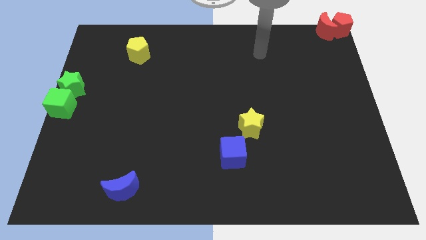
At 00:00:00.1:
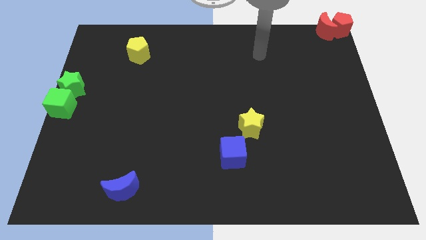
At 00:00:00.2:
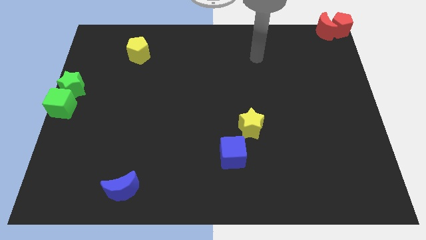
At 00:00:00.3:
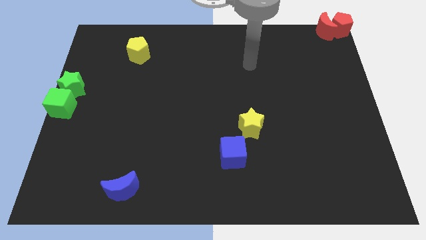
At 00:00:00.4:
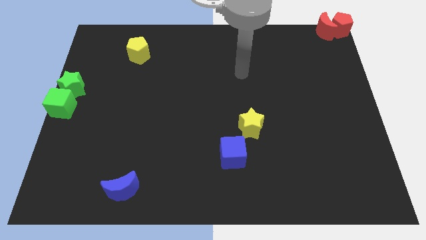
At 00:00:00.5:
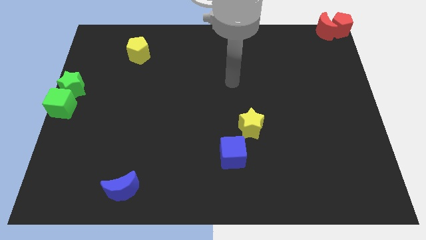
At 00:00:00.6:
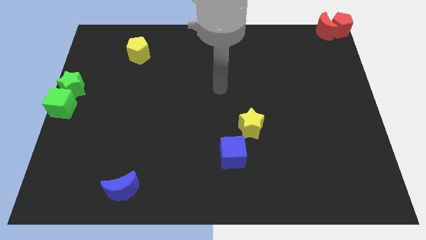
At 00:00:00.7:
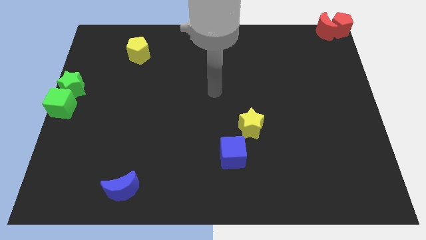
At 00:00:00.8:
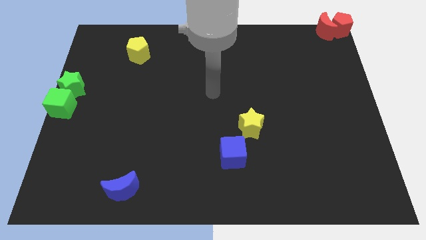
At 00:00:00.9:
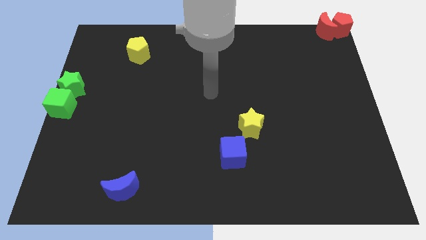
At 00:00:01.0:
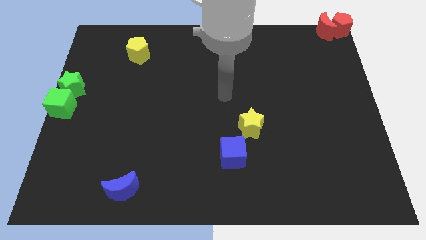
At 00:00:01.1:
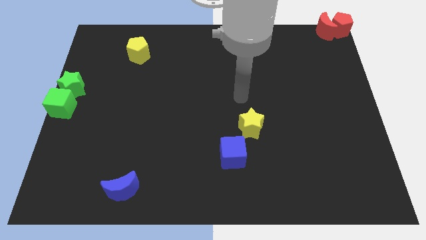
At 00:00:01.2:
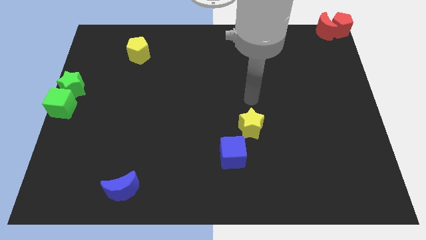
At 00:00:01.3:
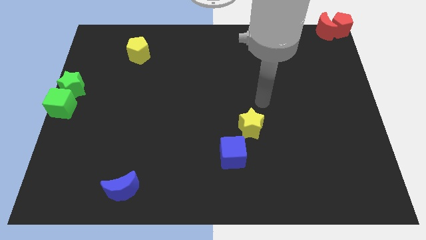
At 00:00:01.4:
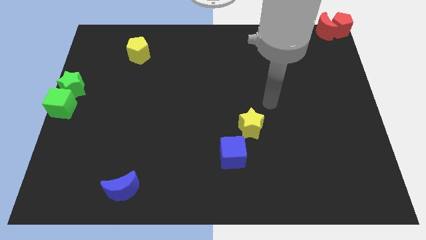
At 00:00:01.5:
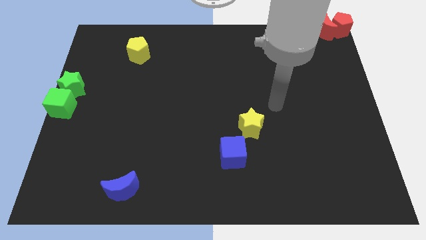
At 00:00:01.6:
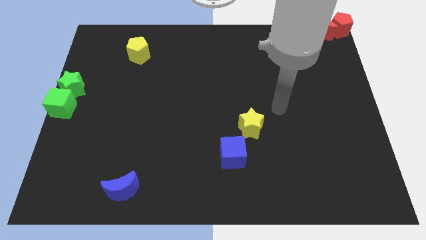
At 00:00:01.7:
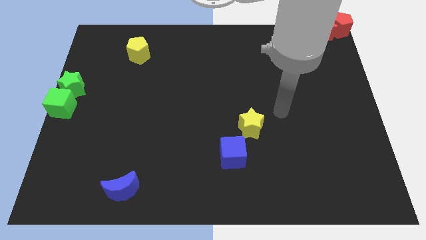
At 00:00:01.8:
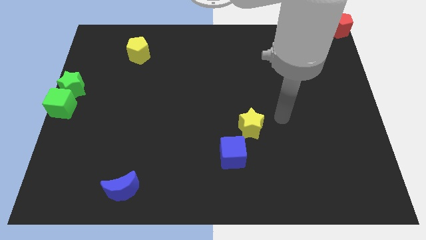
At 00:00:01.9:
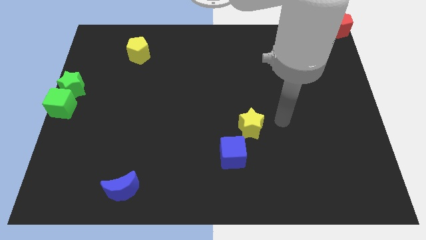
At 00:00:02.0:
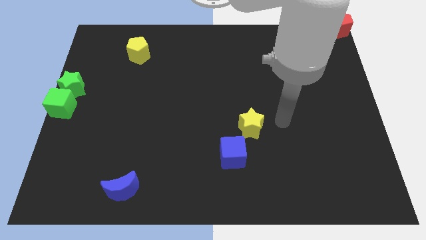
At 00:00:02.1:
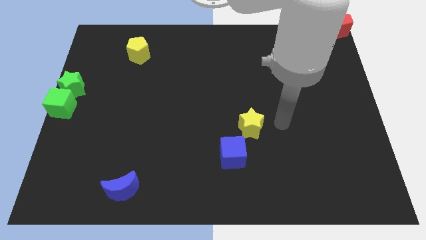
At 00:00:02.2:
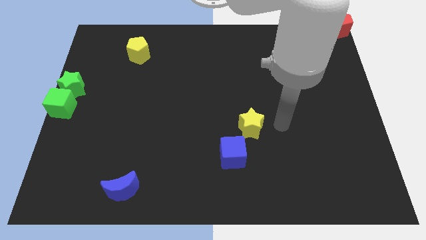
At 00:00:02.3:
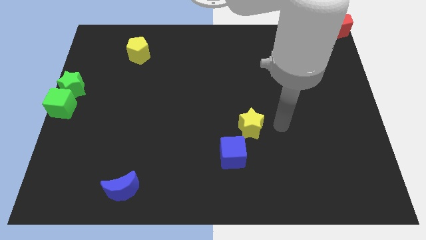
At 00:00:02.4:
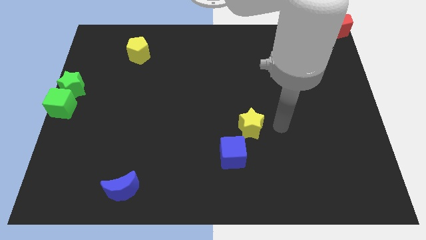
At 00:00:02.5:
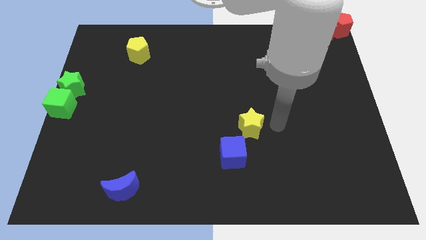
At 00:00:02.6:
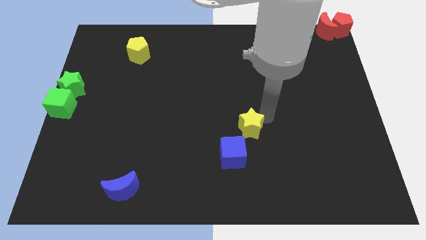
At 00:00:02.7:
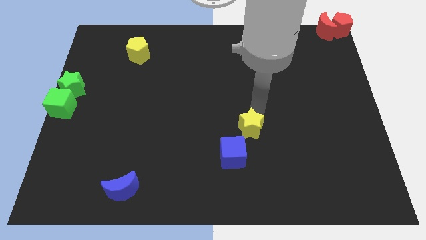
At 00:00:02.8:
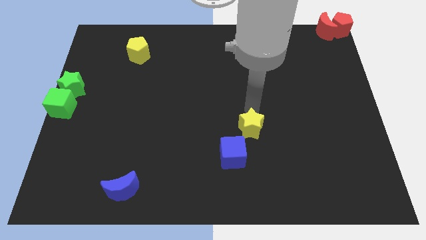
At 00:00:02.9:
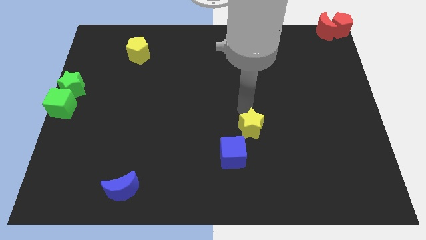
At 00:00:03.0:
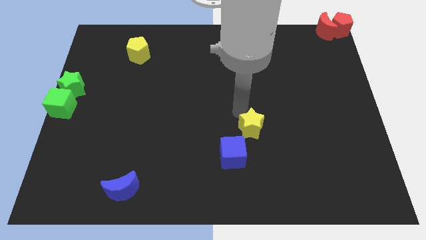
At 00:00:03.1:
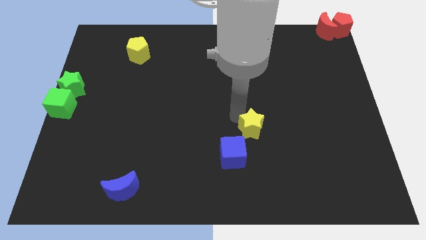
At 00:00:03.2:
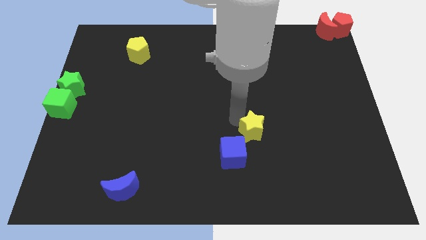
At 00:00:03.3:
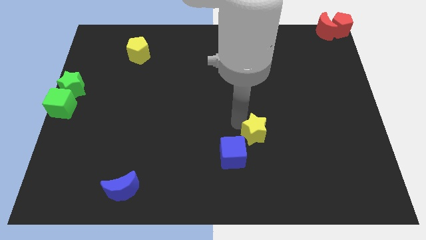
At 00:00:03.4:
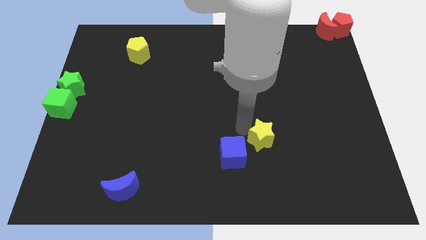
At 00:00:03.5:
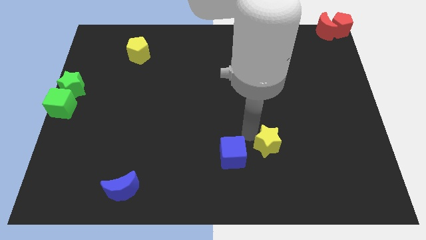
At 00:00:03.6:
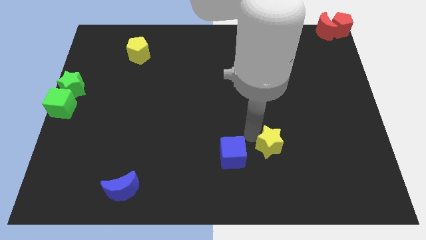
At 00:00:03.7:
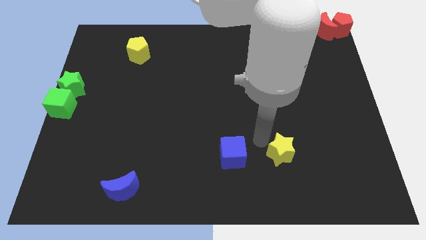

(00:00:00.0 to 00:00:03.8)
push the yellow star right of blue cube

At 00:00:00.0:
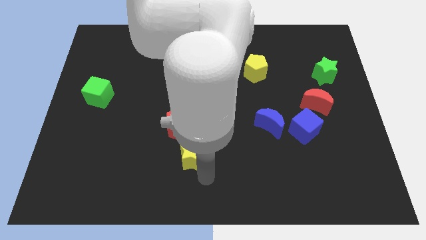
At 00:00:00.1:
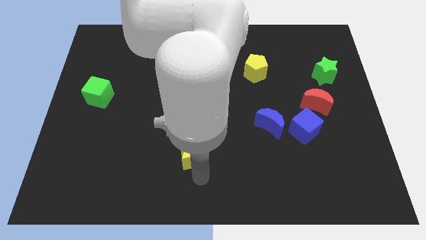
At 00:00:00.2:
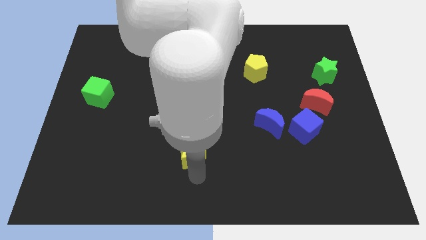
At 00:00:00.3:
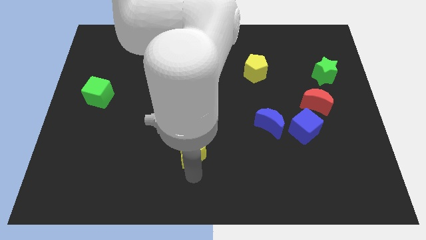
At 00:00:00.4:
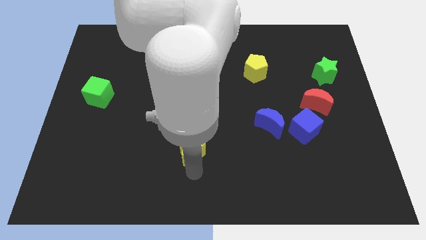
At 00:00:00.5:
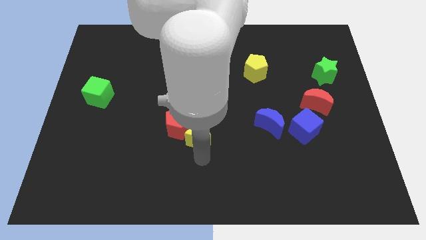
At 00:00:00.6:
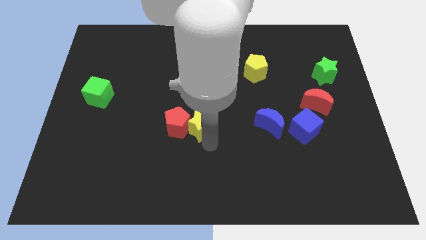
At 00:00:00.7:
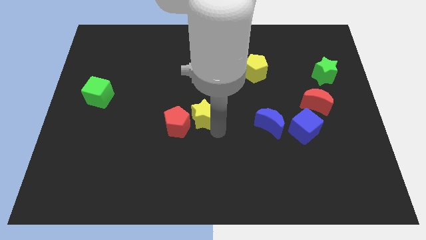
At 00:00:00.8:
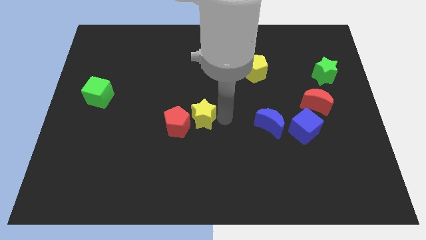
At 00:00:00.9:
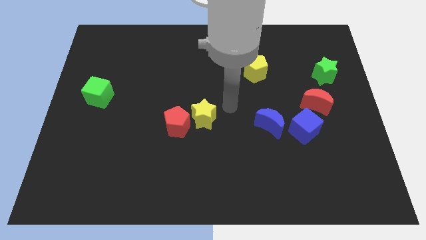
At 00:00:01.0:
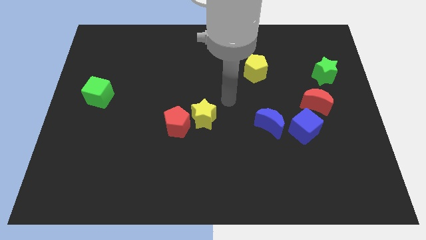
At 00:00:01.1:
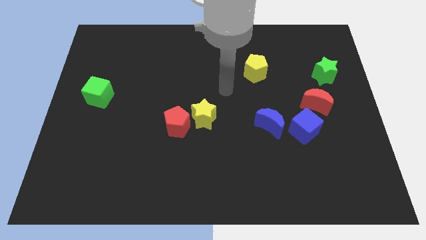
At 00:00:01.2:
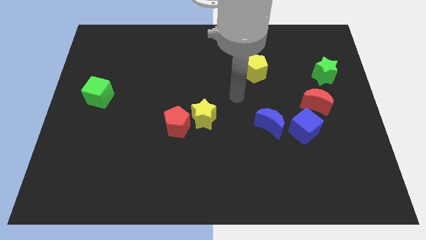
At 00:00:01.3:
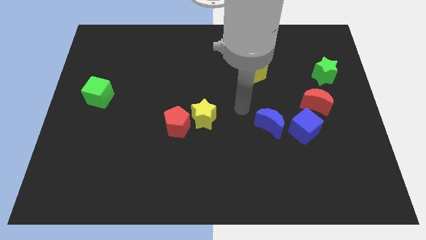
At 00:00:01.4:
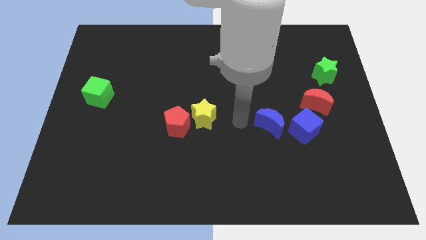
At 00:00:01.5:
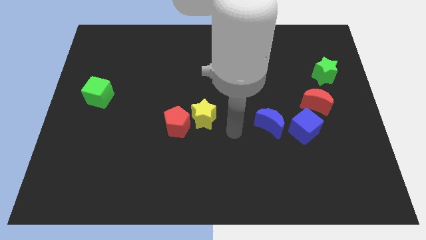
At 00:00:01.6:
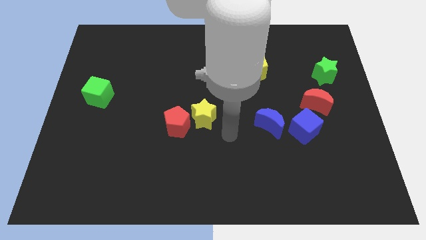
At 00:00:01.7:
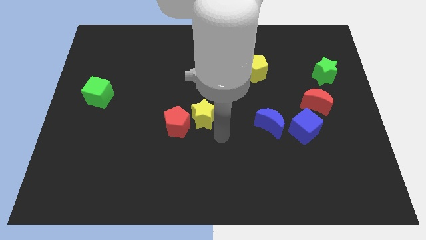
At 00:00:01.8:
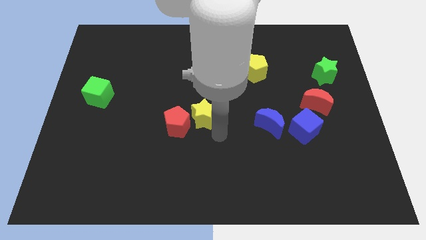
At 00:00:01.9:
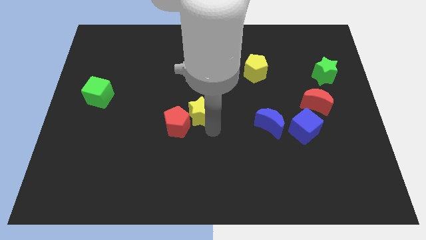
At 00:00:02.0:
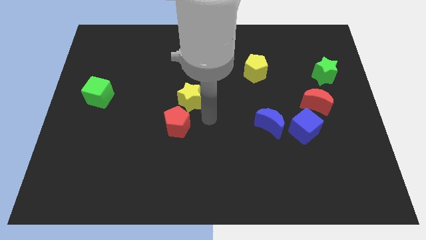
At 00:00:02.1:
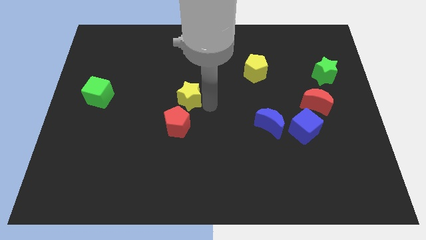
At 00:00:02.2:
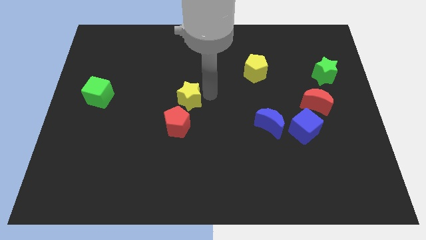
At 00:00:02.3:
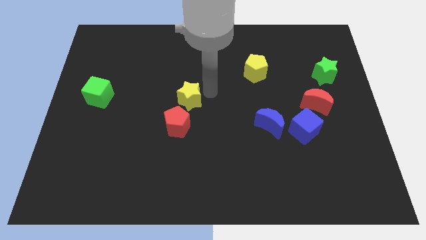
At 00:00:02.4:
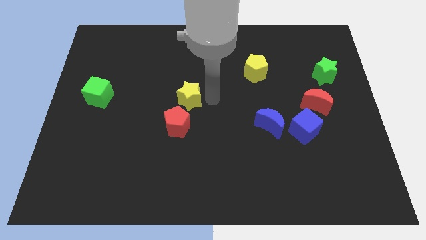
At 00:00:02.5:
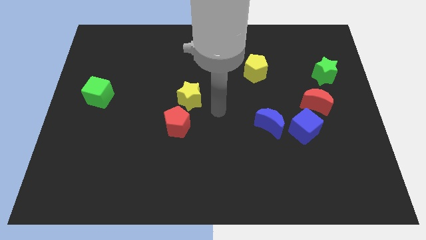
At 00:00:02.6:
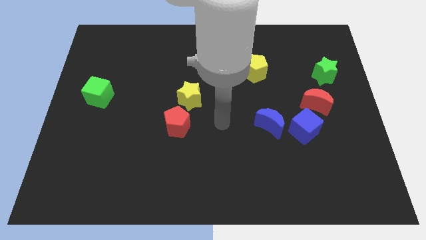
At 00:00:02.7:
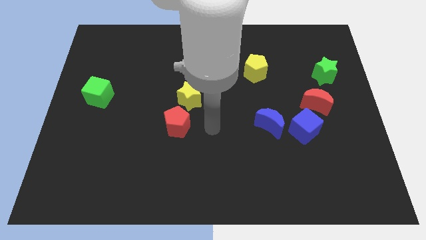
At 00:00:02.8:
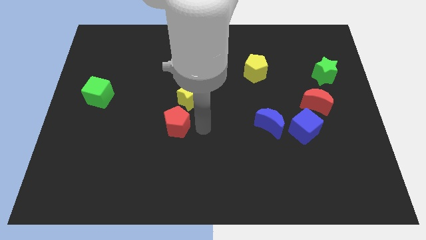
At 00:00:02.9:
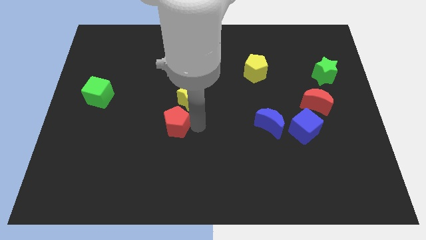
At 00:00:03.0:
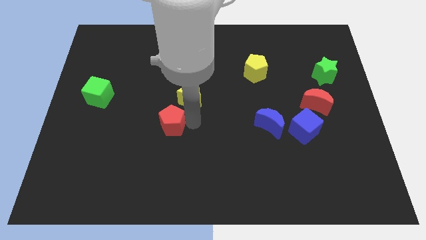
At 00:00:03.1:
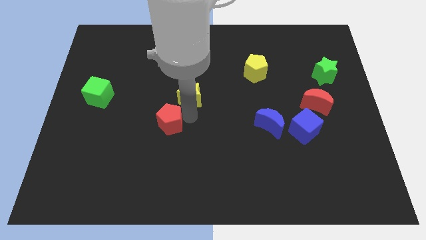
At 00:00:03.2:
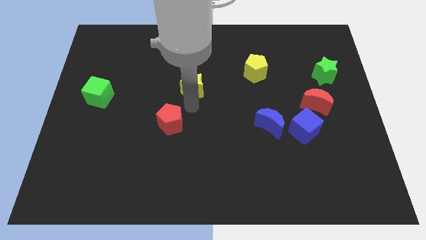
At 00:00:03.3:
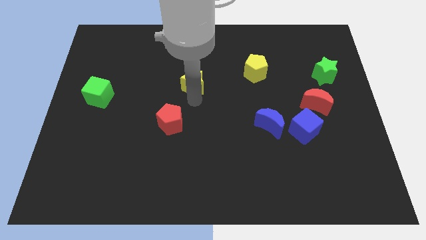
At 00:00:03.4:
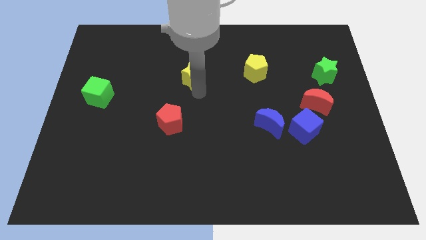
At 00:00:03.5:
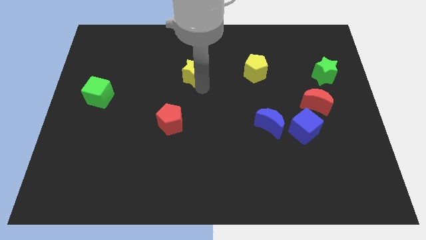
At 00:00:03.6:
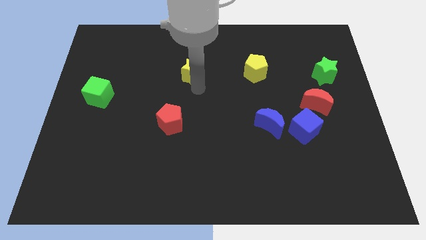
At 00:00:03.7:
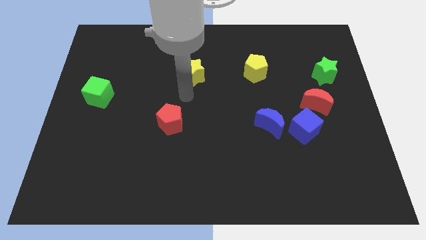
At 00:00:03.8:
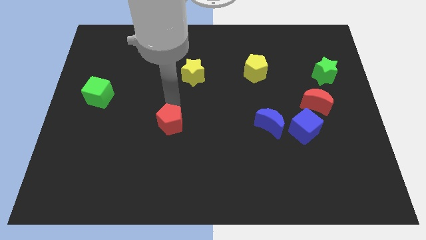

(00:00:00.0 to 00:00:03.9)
move the yellow star to the horizontal left of the yellow pentagon

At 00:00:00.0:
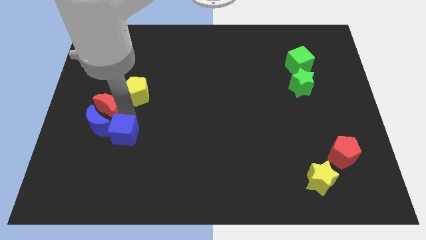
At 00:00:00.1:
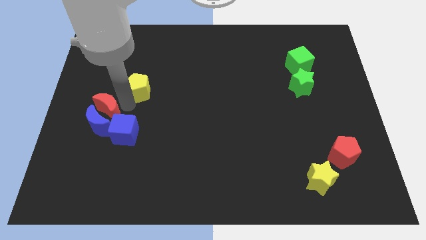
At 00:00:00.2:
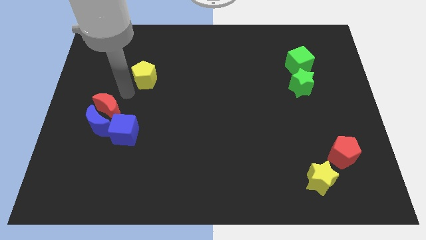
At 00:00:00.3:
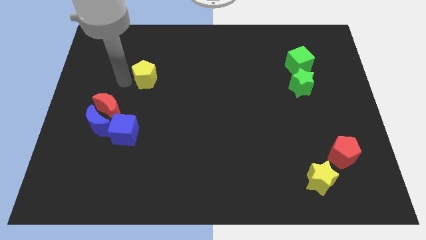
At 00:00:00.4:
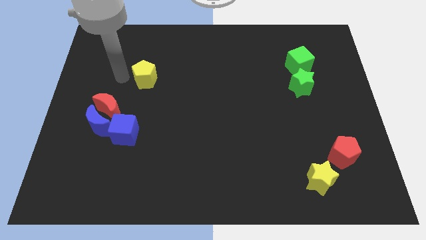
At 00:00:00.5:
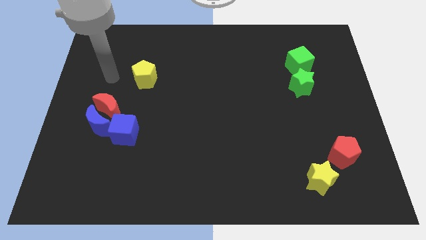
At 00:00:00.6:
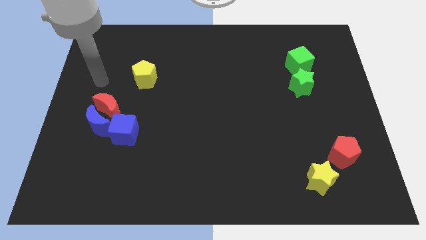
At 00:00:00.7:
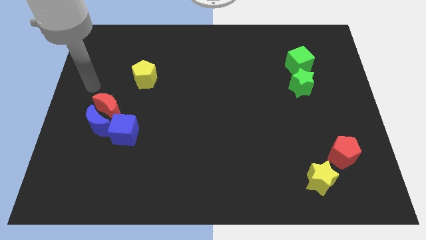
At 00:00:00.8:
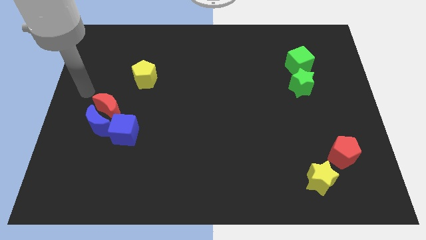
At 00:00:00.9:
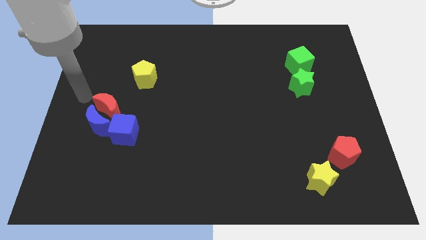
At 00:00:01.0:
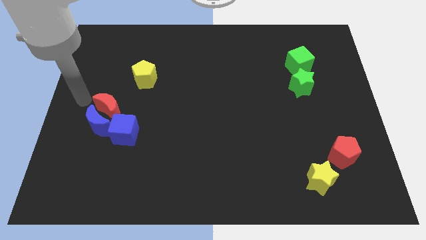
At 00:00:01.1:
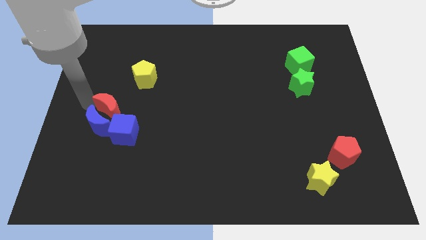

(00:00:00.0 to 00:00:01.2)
move the yellow pentagon to top right of red crescent
